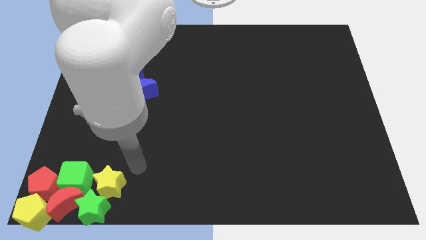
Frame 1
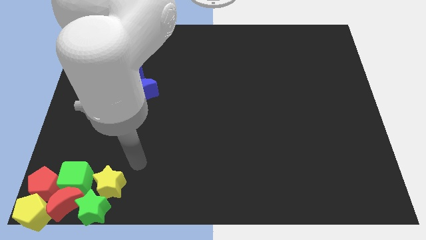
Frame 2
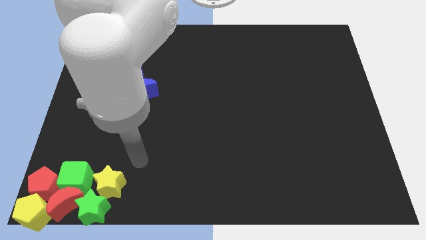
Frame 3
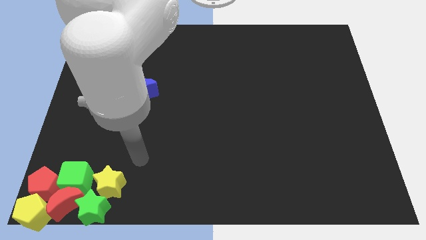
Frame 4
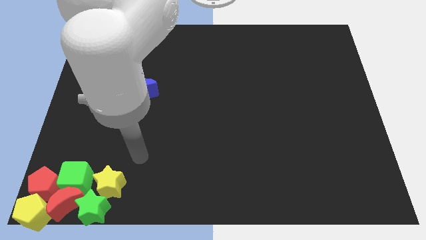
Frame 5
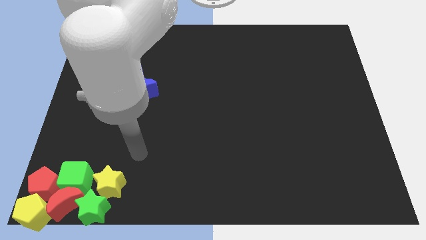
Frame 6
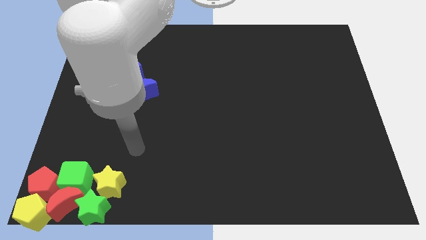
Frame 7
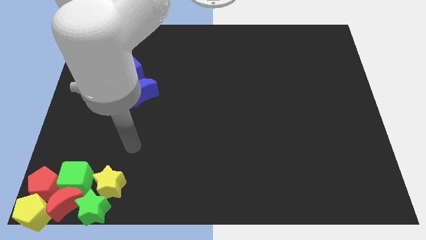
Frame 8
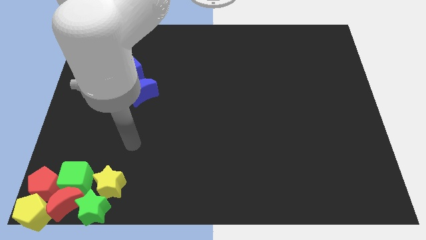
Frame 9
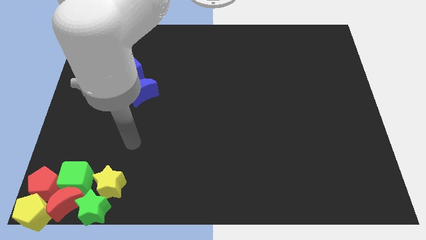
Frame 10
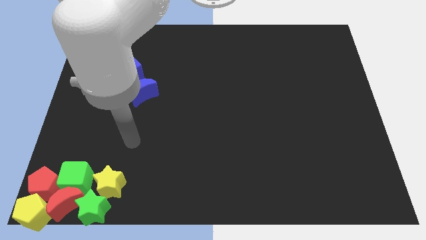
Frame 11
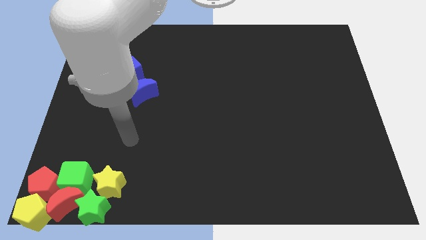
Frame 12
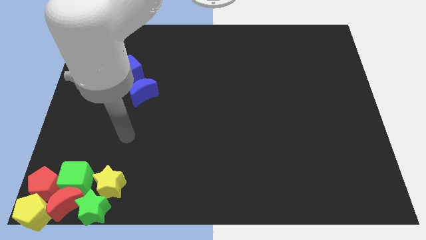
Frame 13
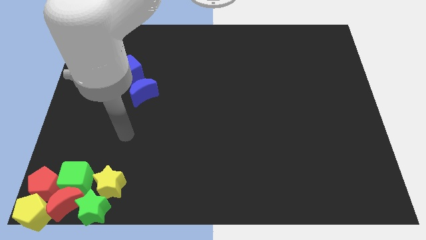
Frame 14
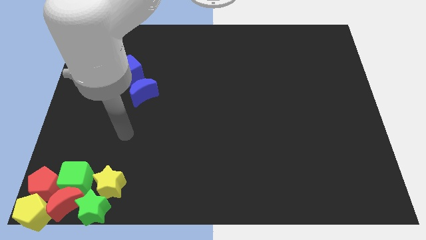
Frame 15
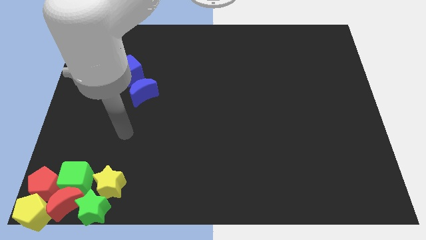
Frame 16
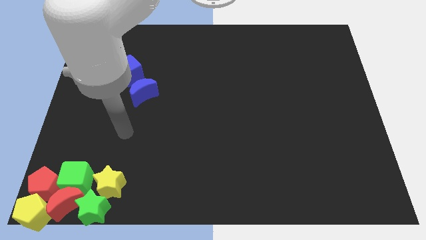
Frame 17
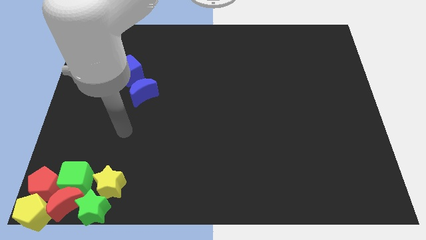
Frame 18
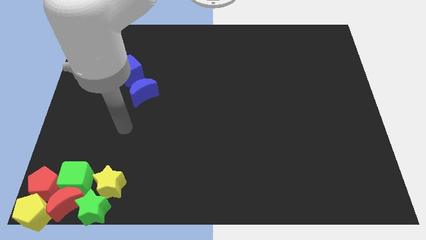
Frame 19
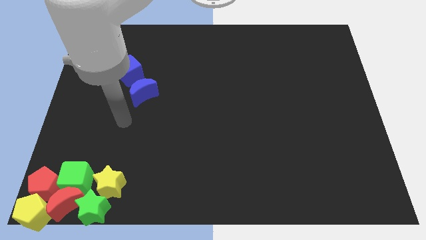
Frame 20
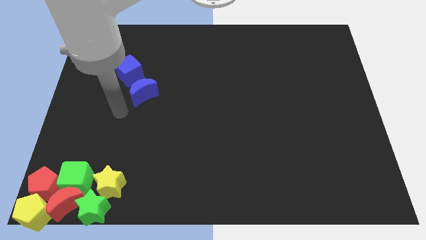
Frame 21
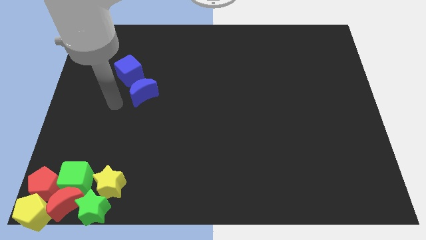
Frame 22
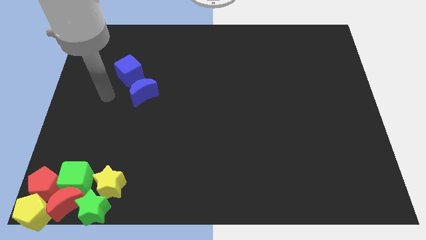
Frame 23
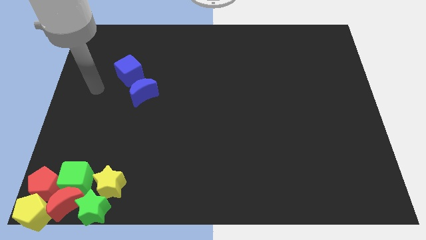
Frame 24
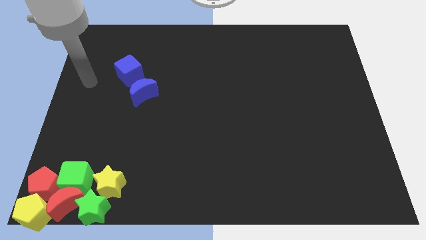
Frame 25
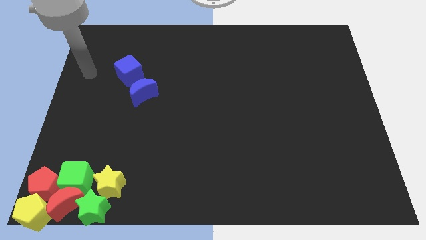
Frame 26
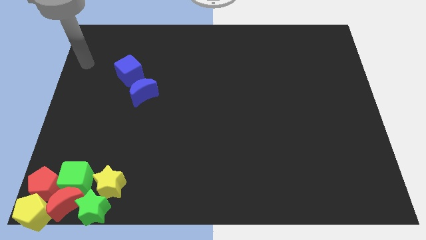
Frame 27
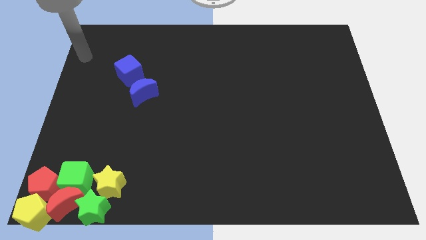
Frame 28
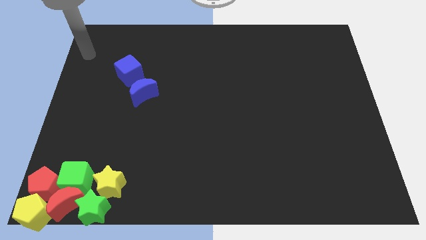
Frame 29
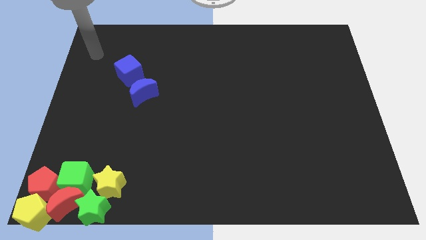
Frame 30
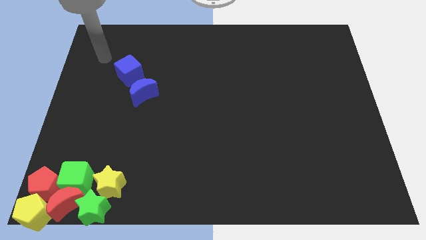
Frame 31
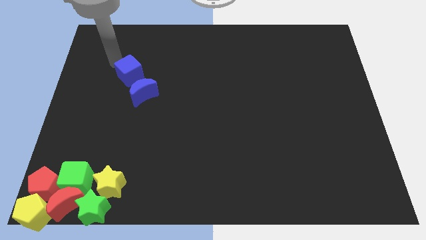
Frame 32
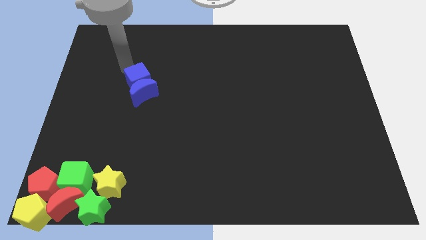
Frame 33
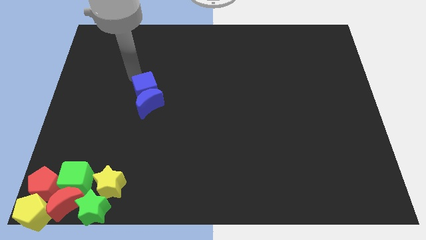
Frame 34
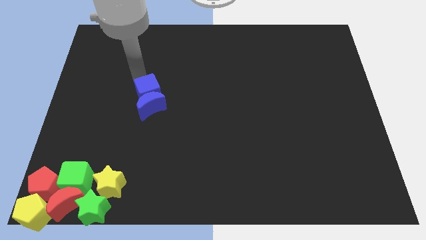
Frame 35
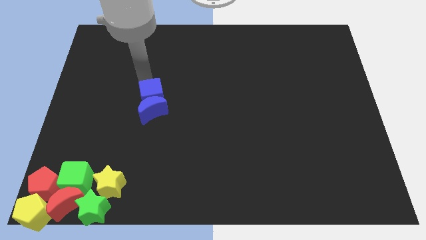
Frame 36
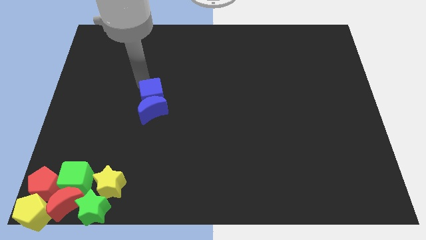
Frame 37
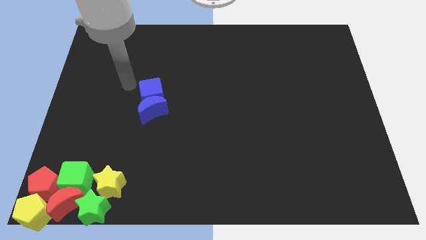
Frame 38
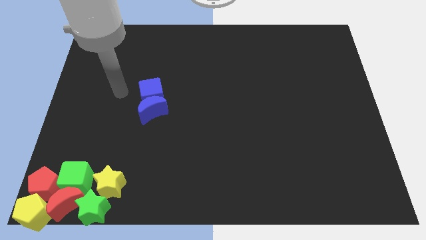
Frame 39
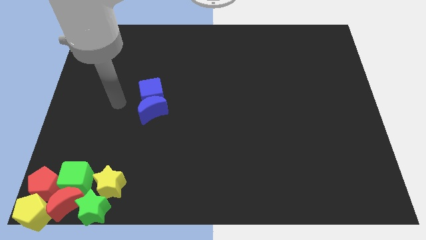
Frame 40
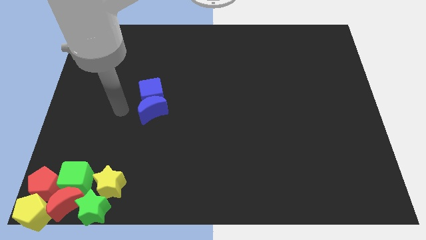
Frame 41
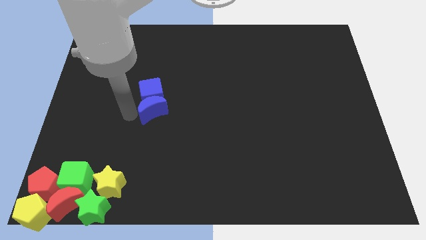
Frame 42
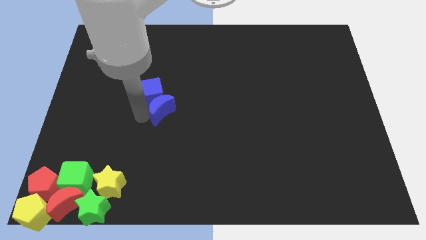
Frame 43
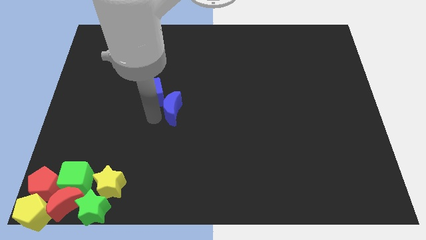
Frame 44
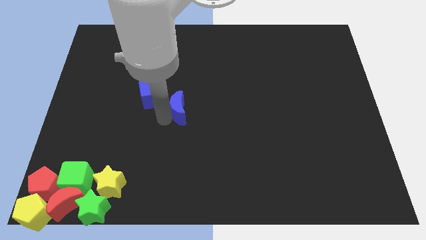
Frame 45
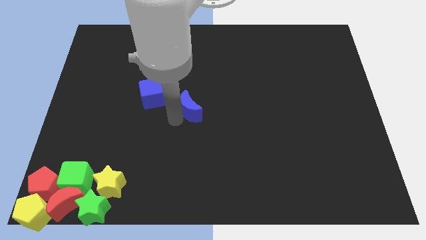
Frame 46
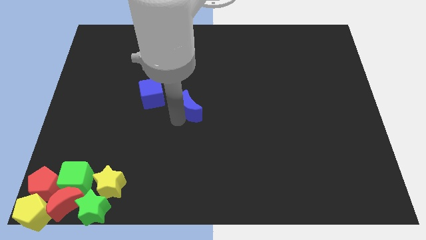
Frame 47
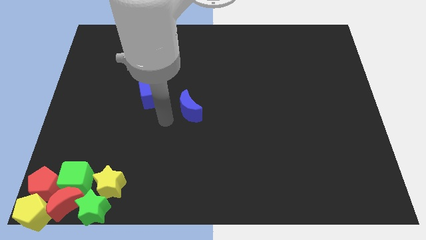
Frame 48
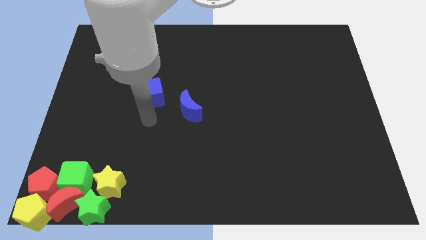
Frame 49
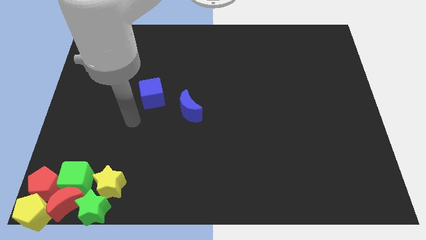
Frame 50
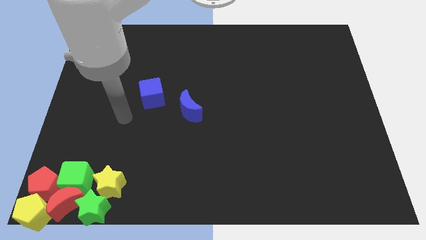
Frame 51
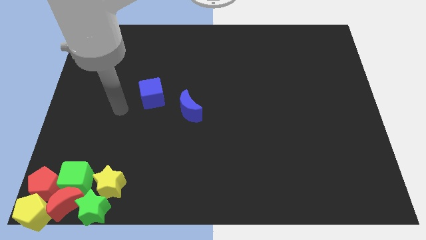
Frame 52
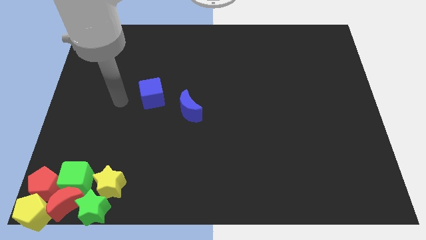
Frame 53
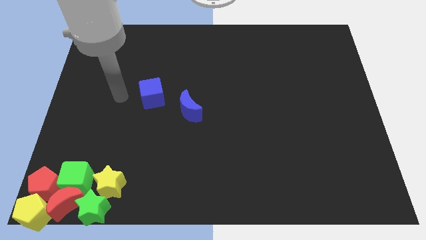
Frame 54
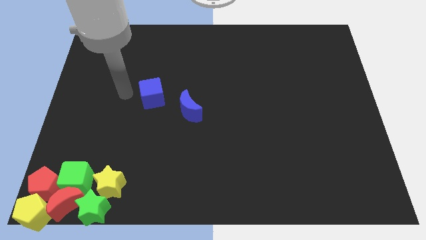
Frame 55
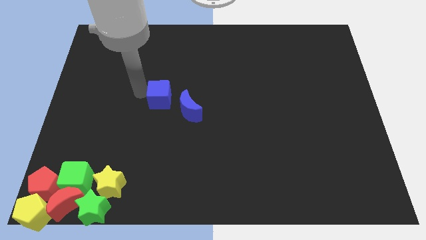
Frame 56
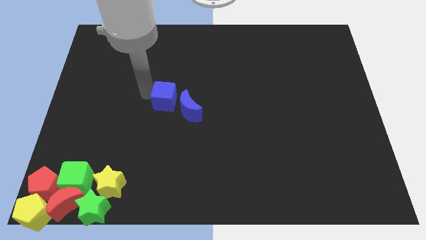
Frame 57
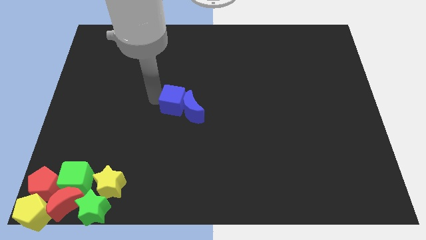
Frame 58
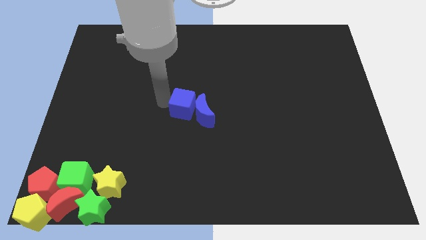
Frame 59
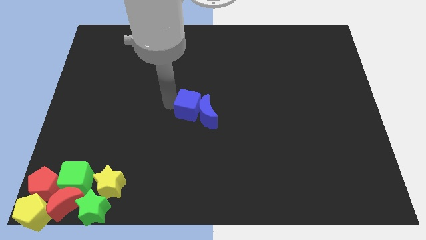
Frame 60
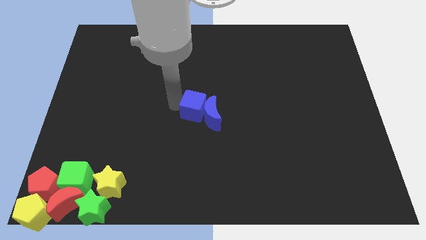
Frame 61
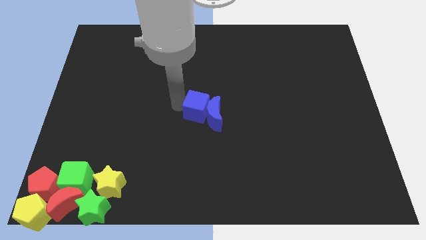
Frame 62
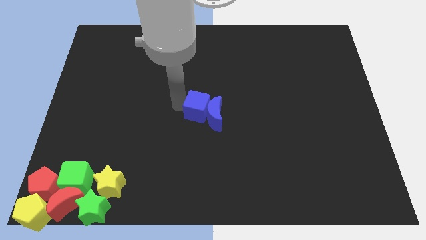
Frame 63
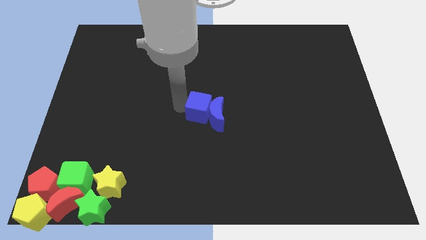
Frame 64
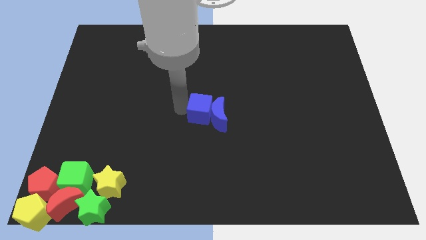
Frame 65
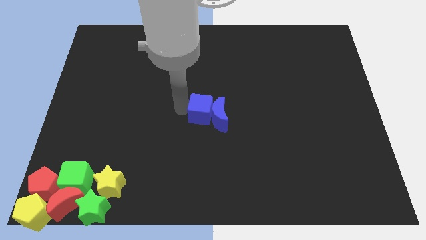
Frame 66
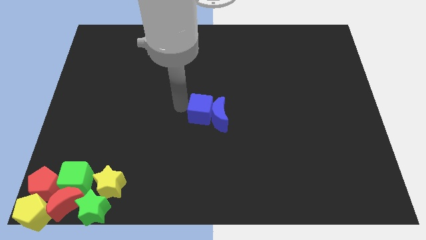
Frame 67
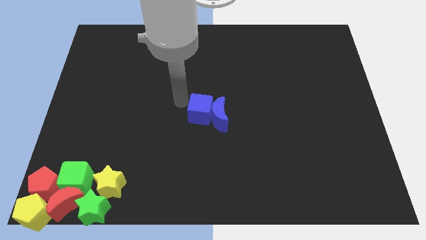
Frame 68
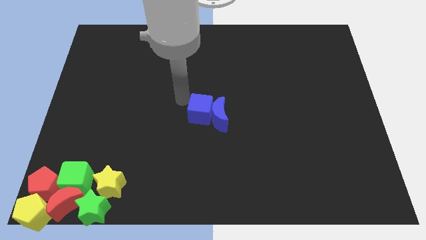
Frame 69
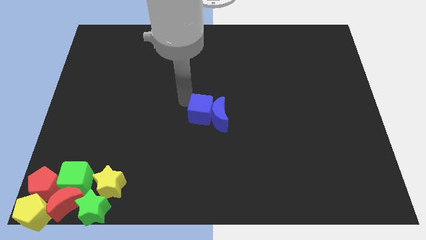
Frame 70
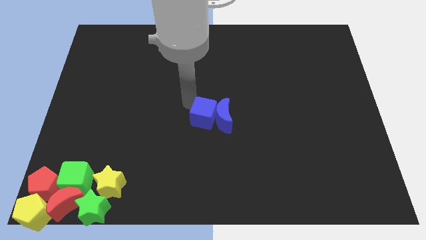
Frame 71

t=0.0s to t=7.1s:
push the blue cube and crescent to the center of the board

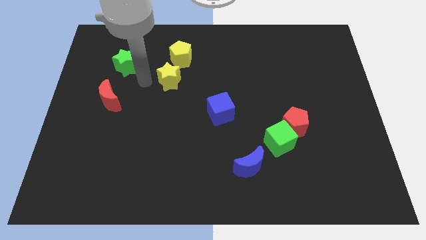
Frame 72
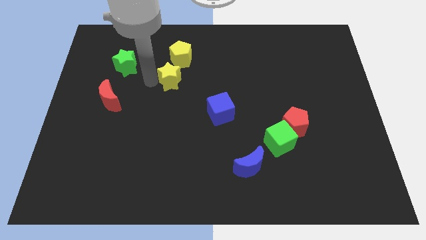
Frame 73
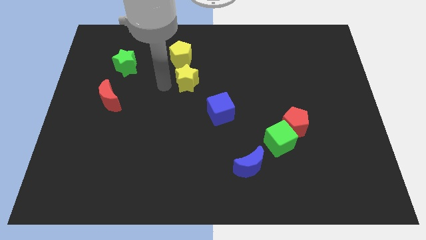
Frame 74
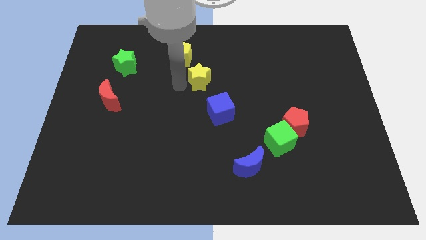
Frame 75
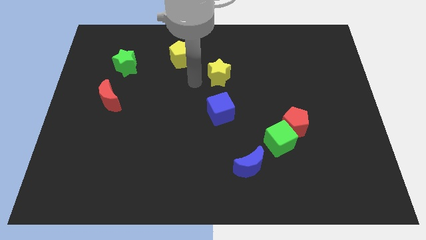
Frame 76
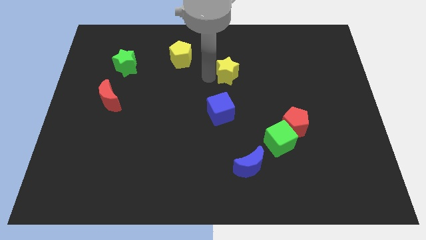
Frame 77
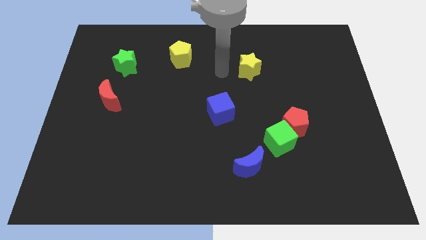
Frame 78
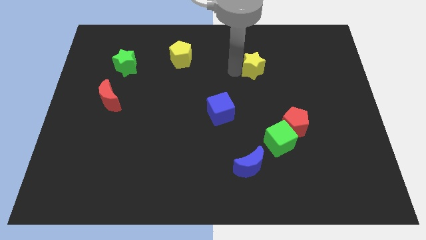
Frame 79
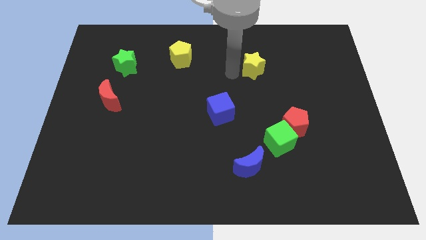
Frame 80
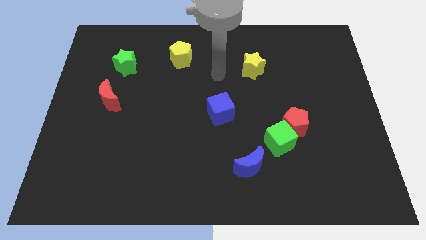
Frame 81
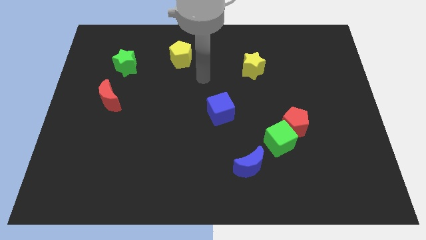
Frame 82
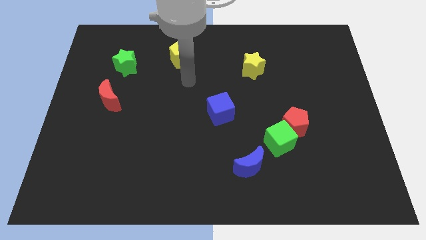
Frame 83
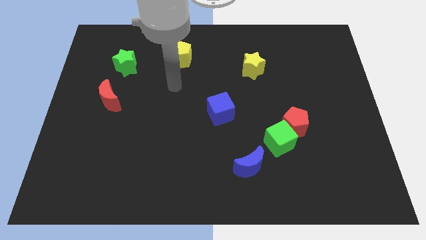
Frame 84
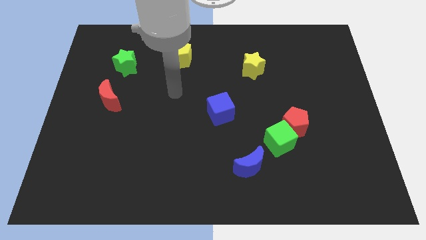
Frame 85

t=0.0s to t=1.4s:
slide the yellow star to the right of the board

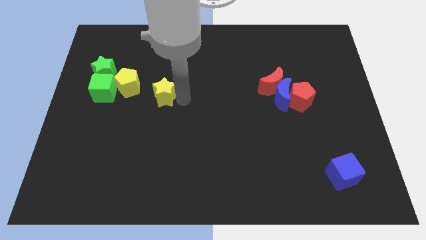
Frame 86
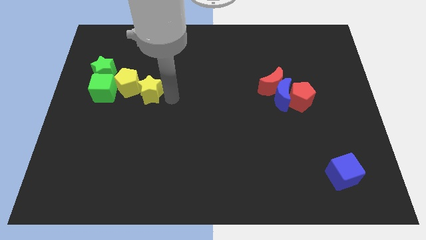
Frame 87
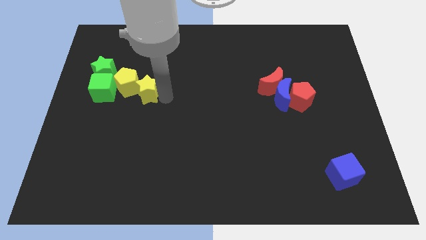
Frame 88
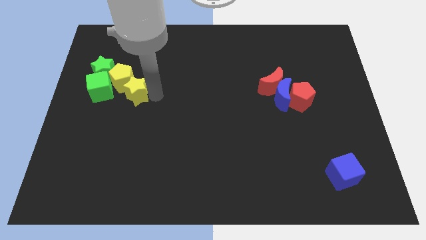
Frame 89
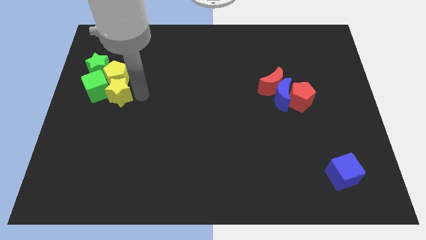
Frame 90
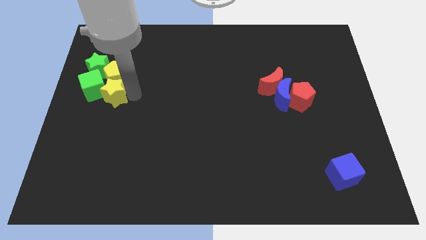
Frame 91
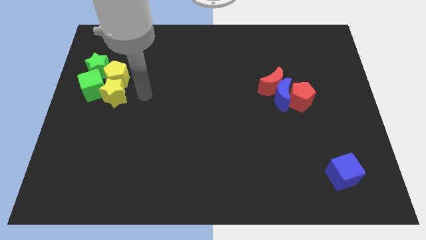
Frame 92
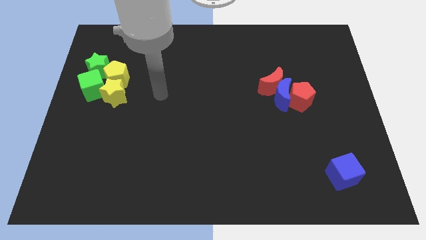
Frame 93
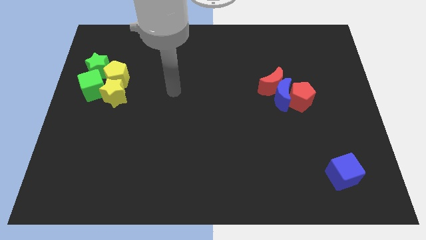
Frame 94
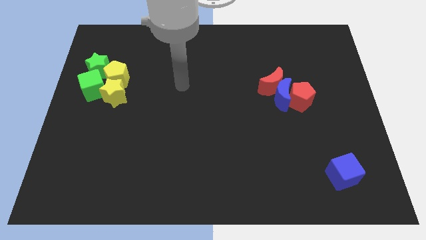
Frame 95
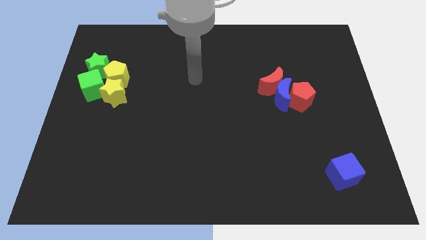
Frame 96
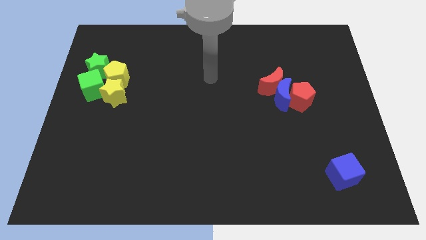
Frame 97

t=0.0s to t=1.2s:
push the yellow star into the green cube
